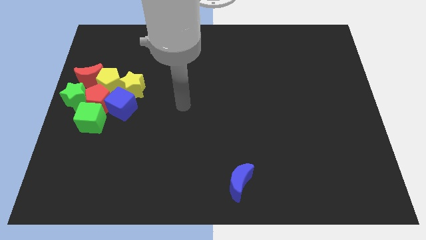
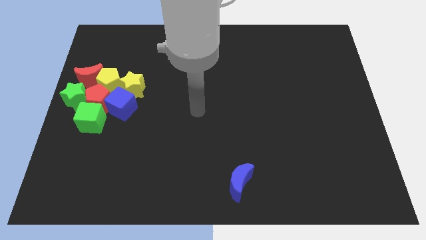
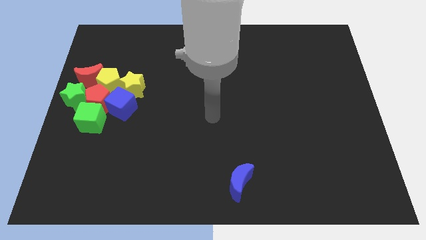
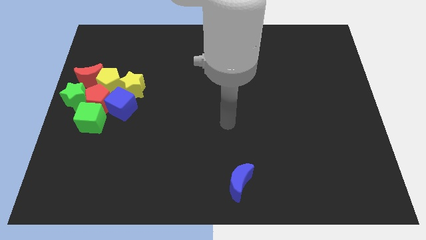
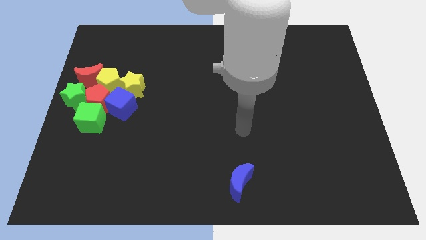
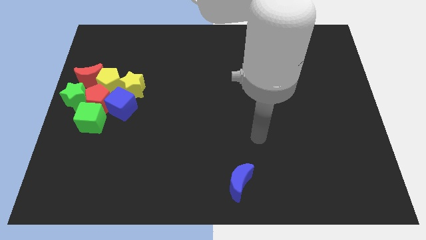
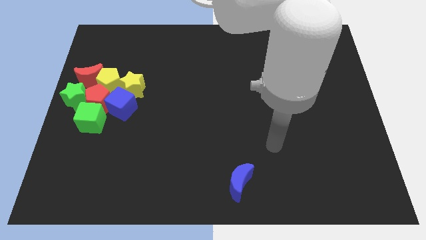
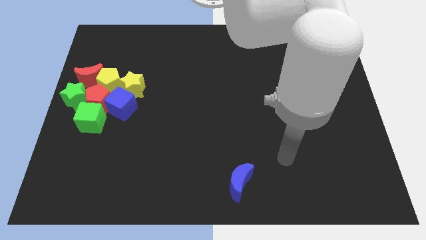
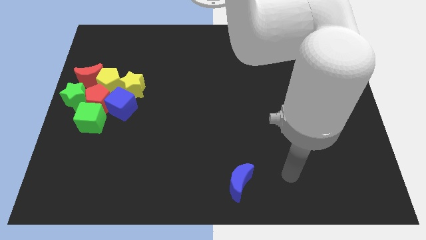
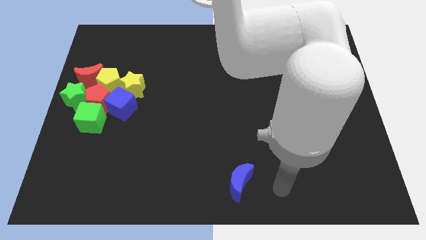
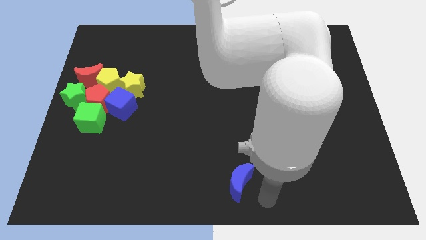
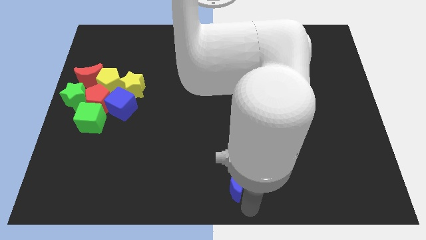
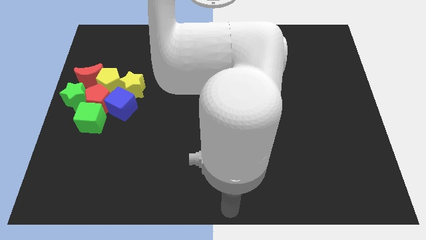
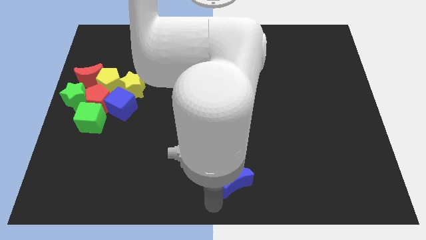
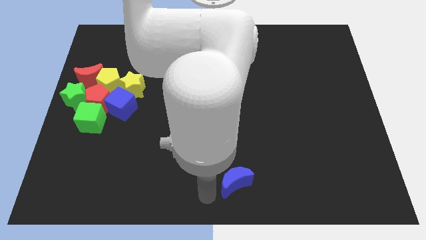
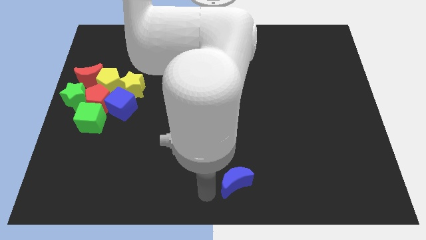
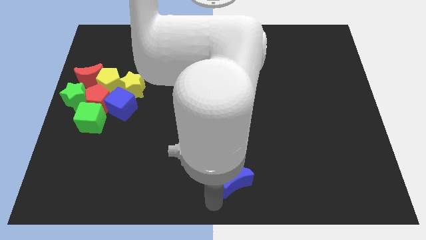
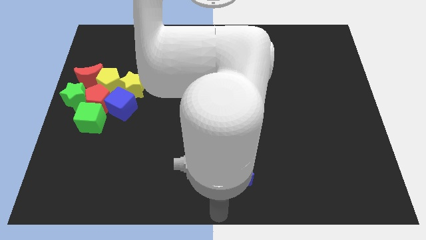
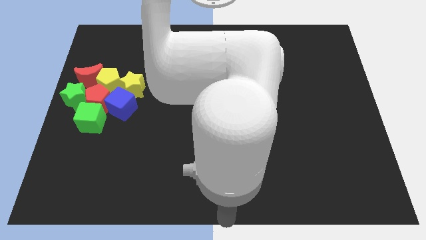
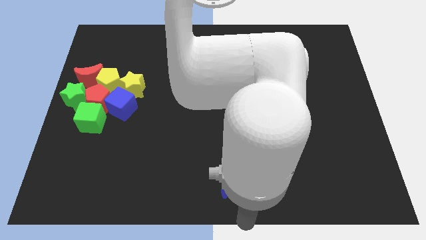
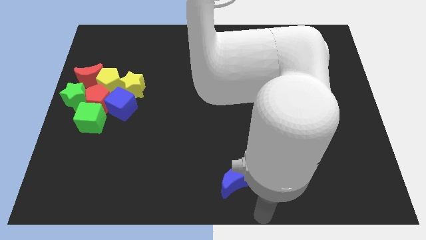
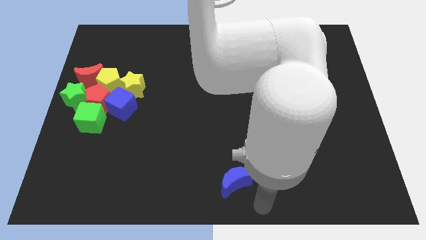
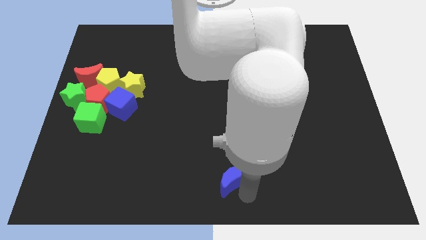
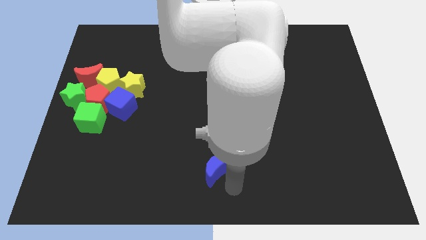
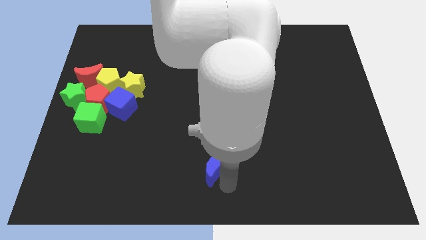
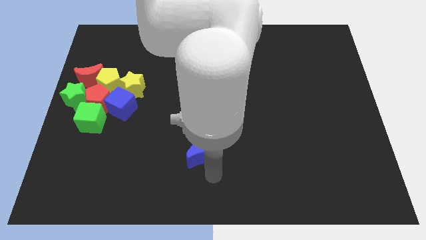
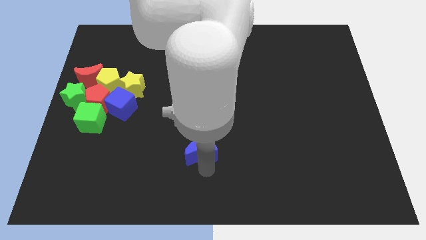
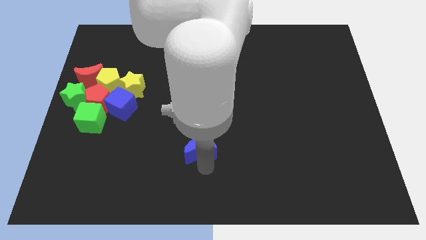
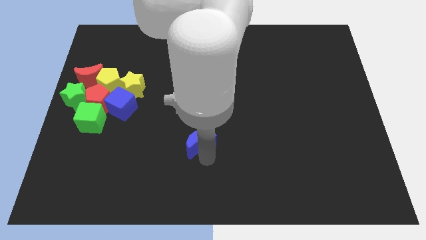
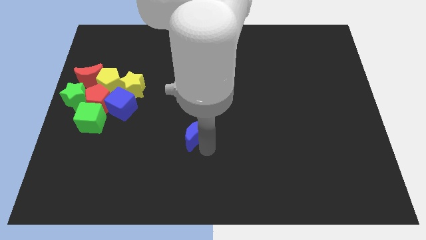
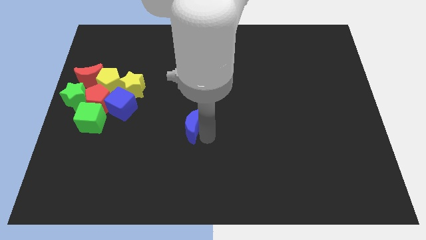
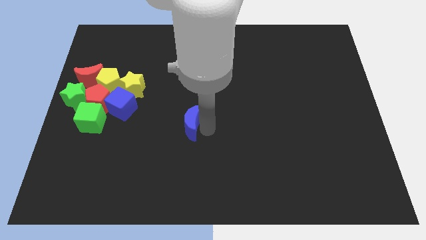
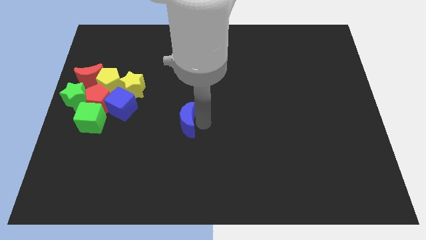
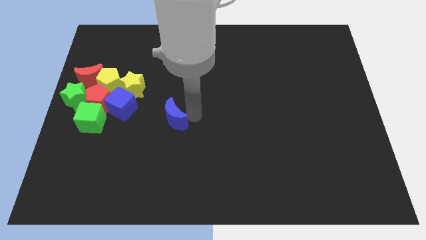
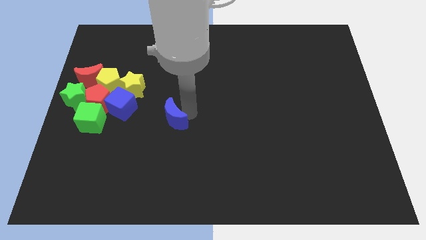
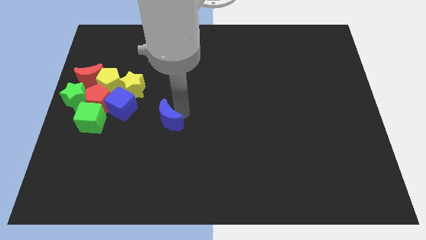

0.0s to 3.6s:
slide the blue moon right to the blue cube

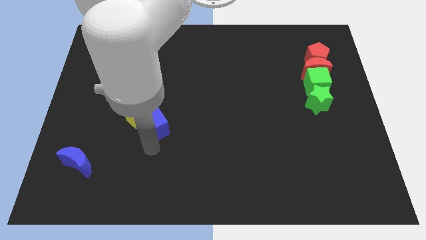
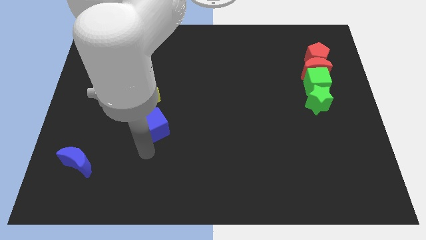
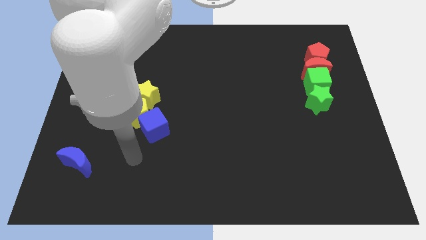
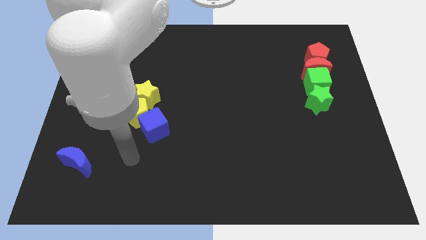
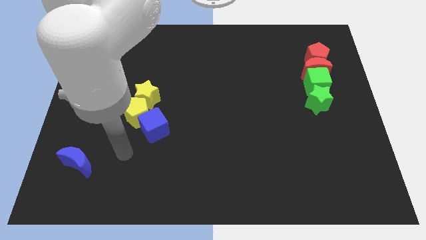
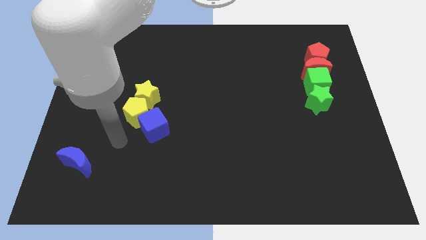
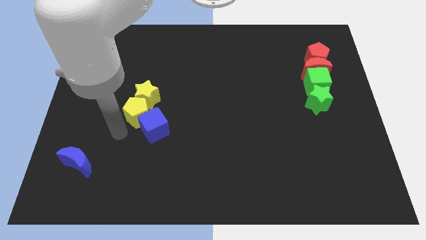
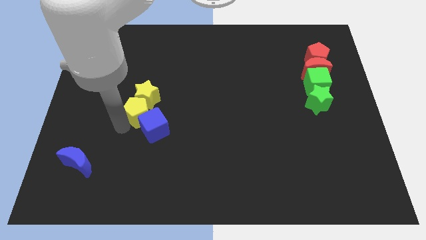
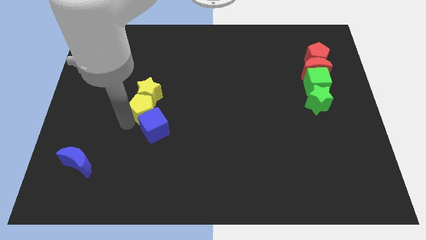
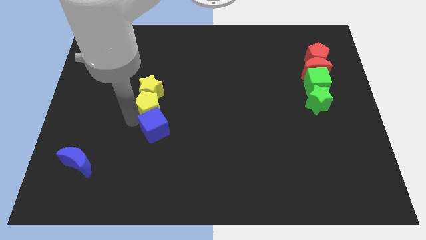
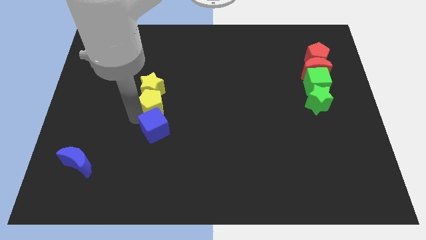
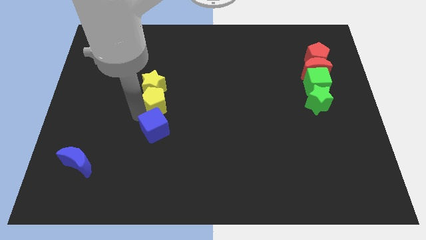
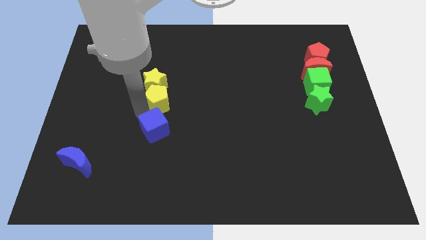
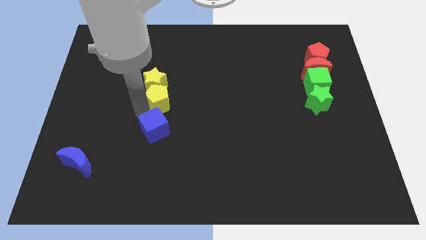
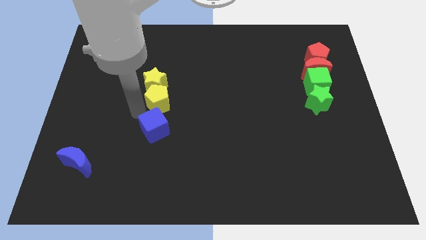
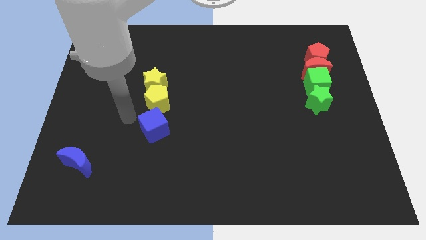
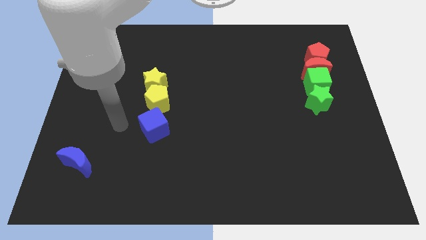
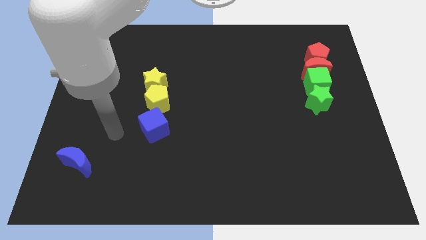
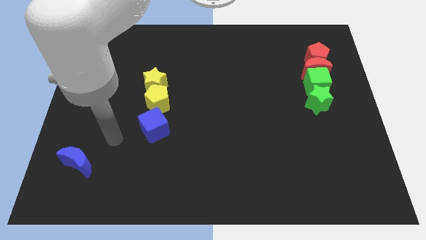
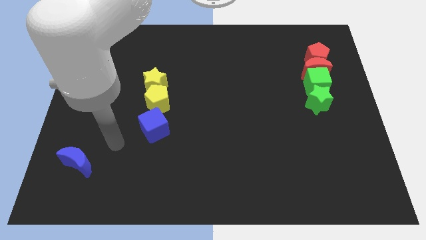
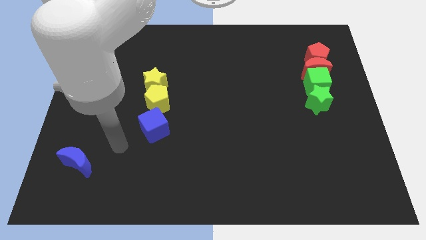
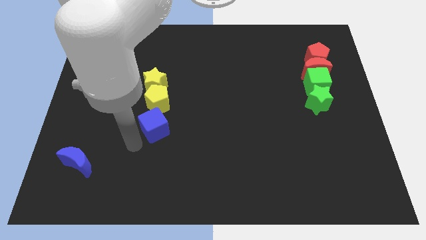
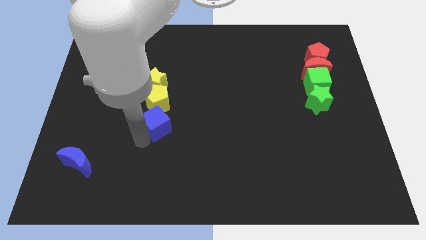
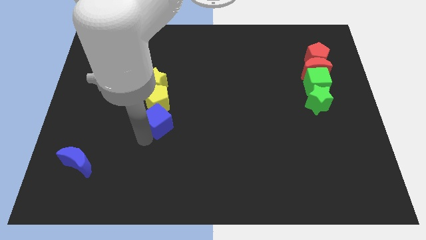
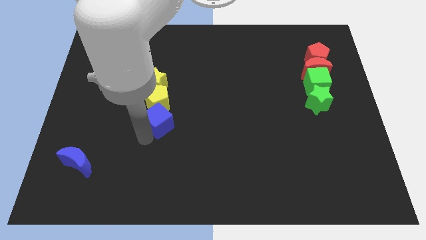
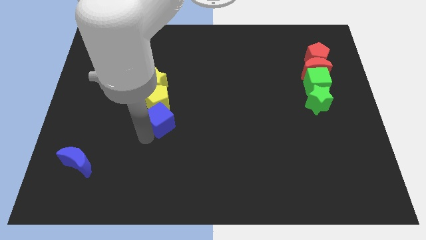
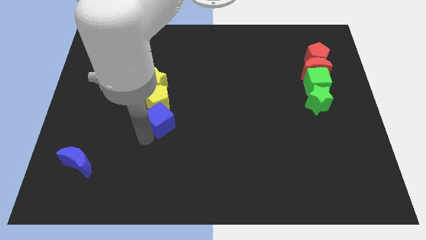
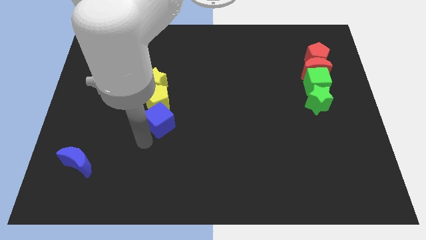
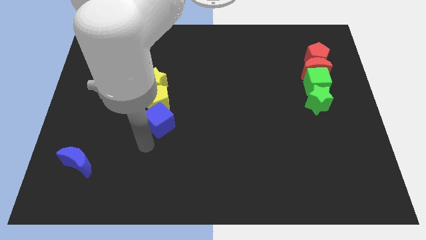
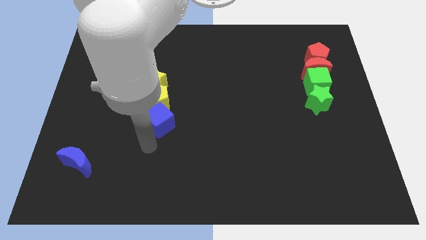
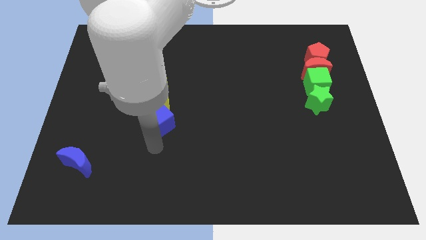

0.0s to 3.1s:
place your arm below blue cube

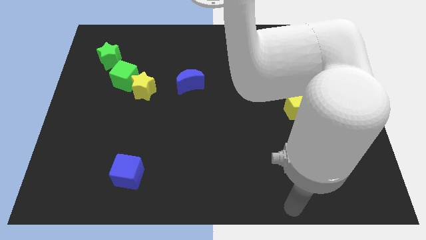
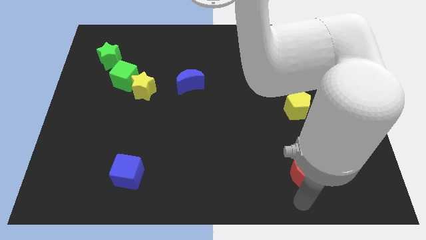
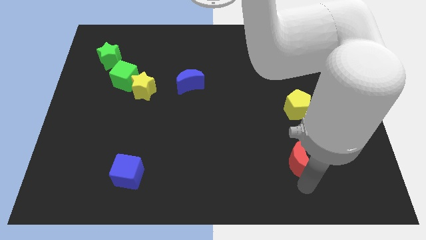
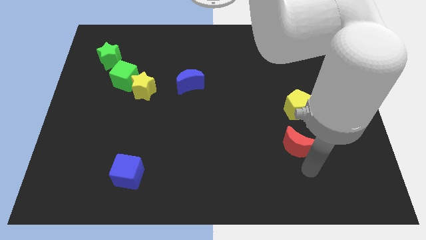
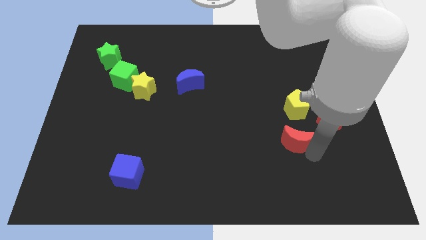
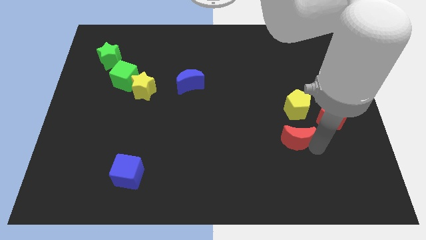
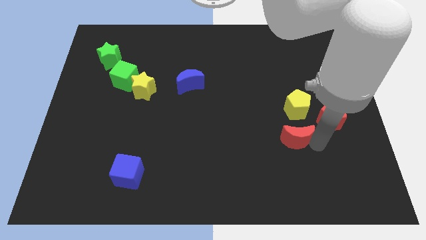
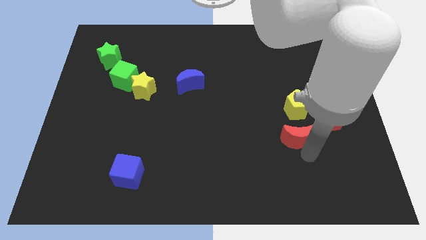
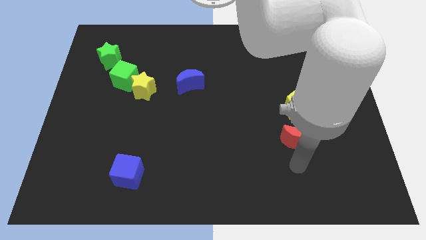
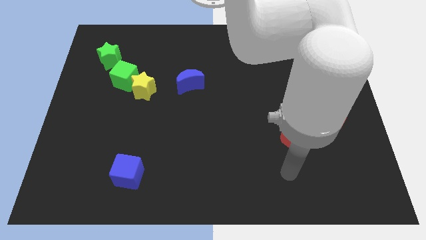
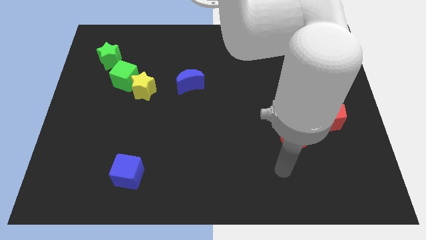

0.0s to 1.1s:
move the red crescent vertically to the bottom of the yellow pentagon

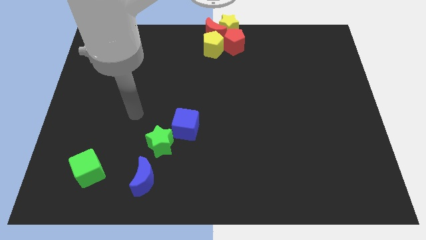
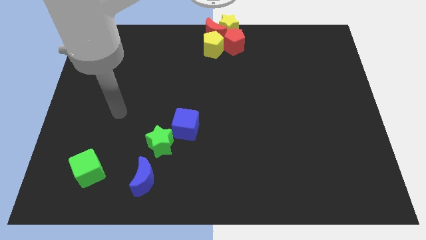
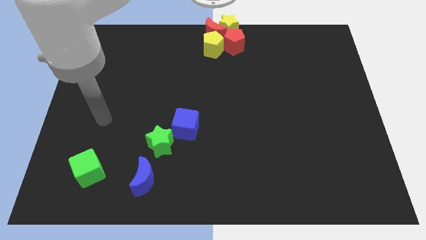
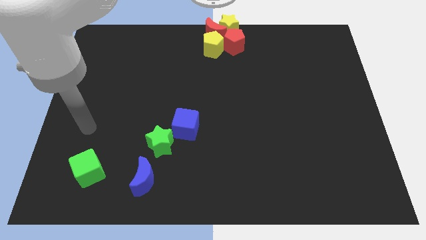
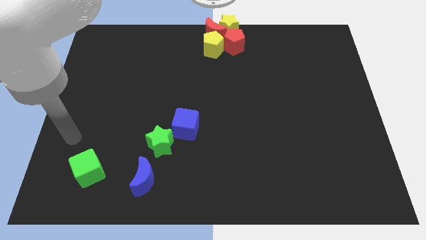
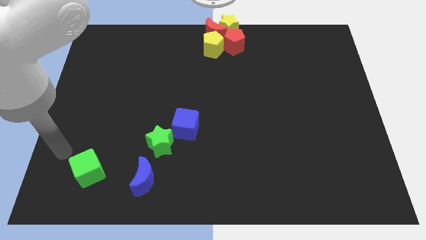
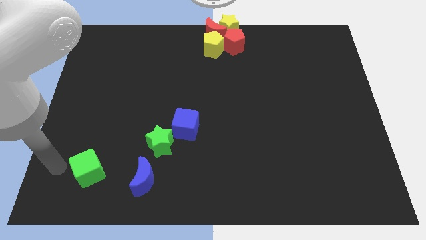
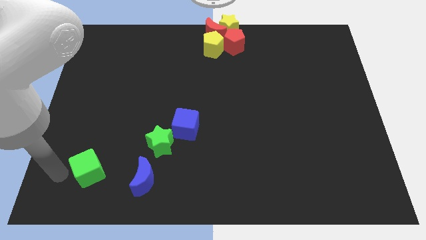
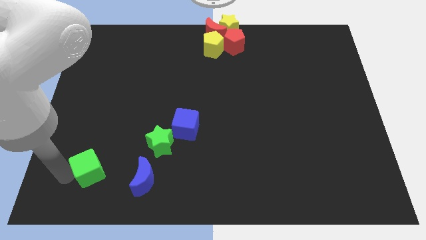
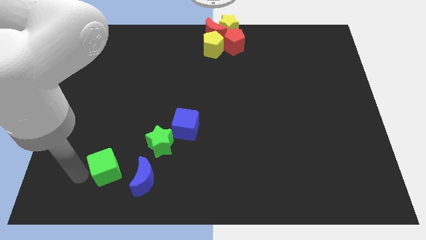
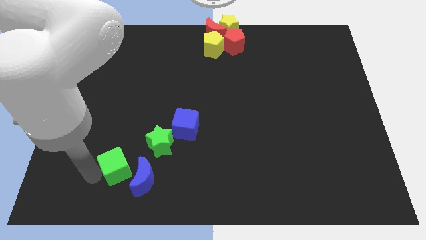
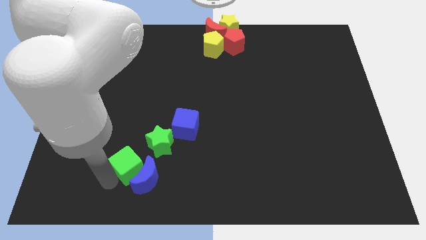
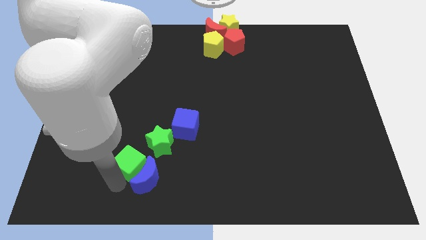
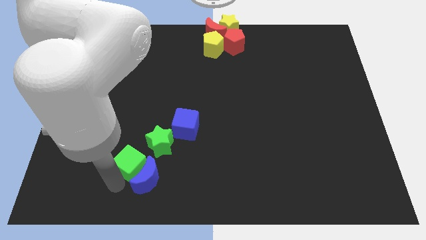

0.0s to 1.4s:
push the green cube into the blue moon
